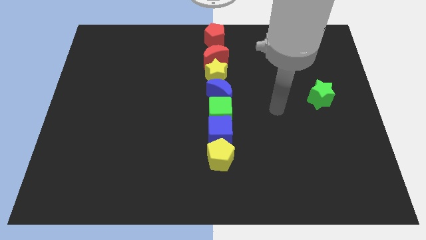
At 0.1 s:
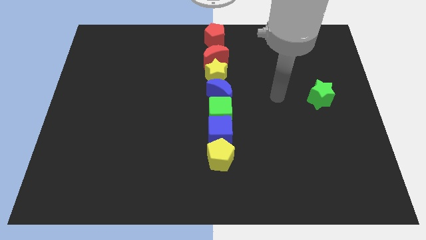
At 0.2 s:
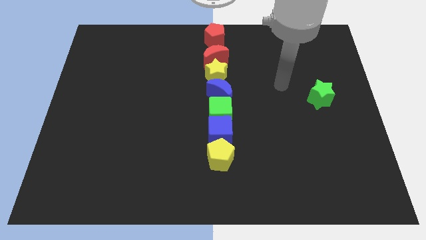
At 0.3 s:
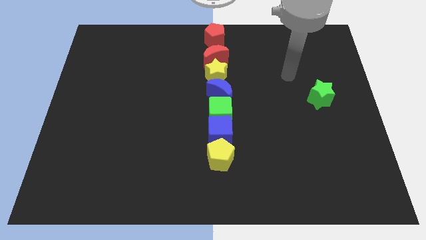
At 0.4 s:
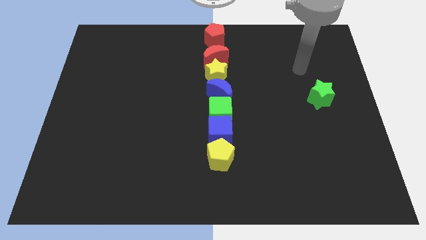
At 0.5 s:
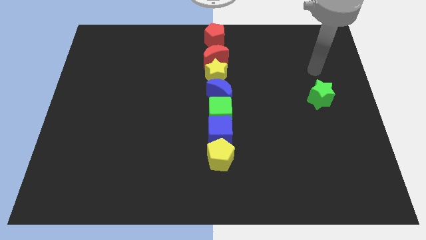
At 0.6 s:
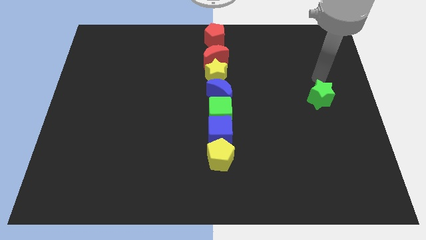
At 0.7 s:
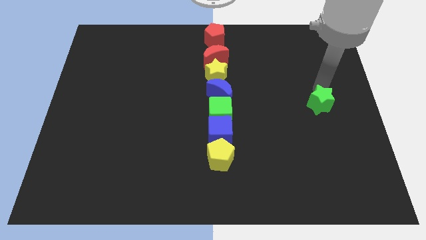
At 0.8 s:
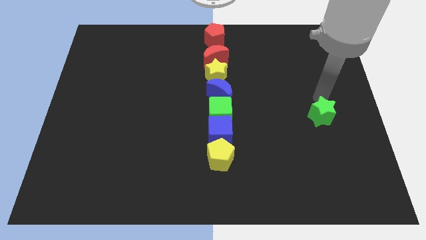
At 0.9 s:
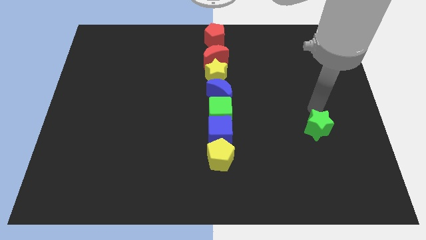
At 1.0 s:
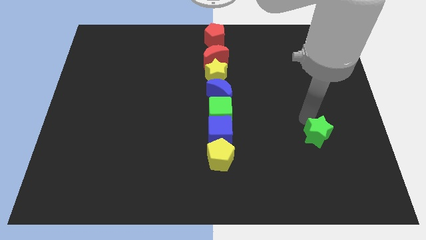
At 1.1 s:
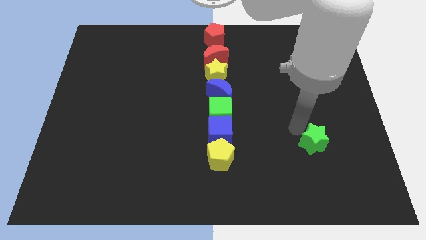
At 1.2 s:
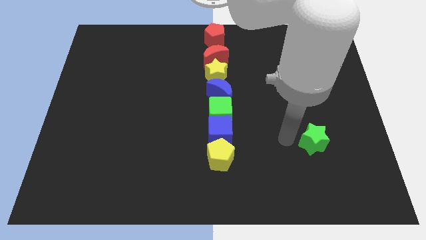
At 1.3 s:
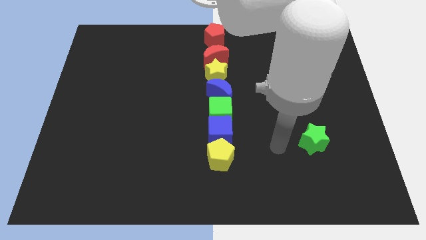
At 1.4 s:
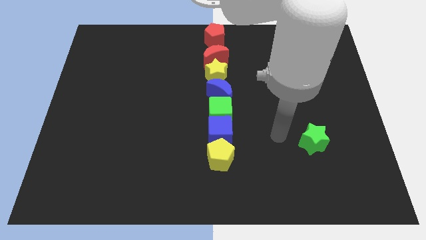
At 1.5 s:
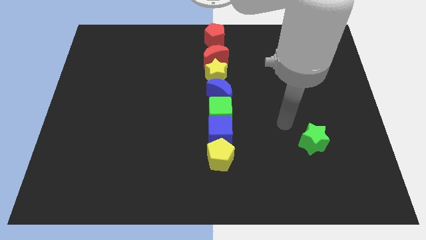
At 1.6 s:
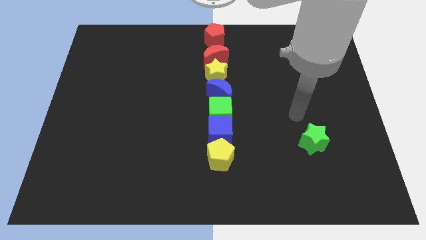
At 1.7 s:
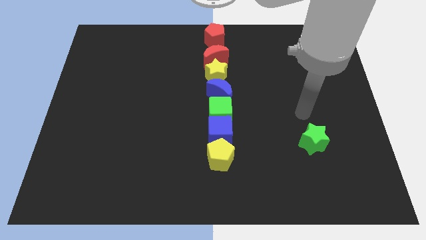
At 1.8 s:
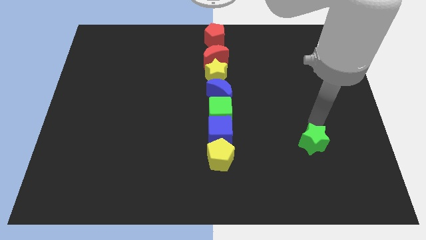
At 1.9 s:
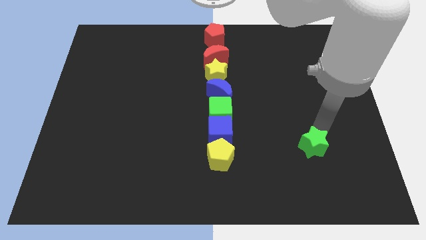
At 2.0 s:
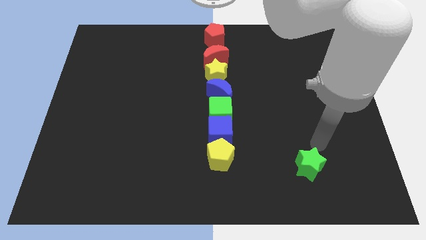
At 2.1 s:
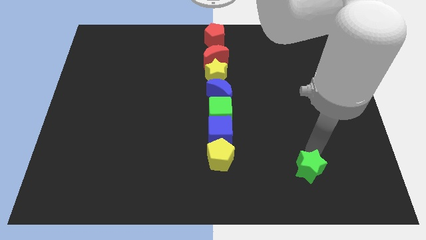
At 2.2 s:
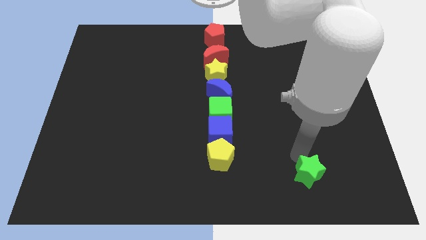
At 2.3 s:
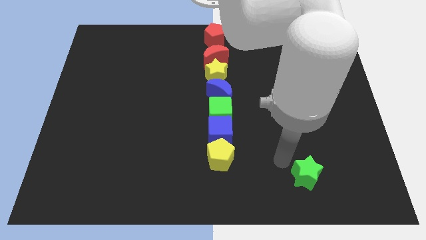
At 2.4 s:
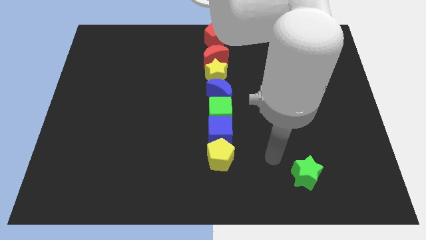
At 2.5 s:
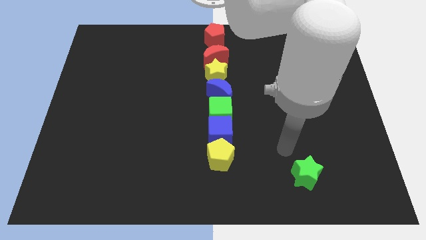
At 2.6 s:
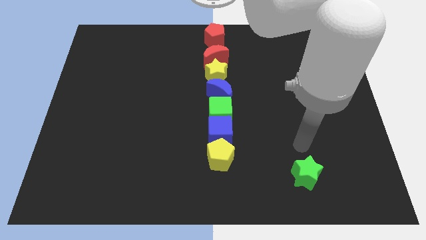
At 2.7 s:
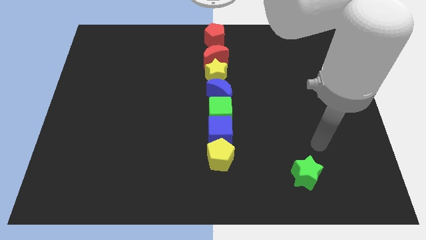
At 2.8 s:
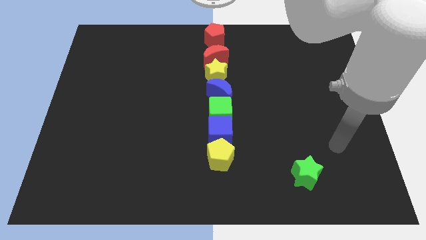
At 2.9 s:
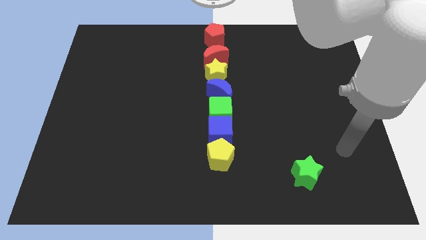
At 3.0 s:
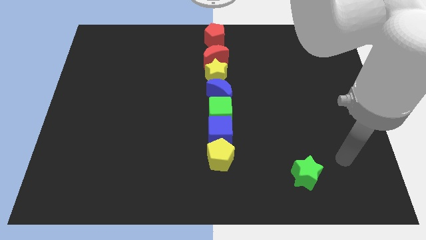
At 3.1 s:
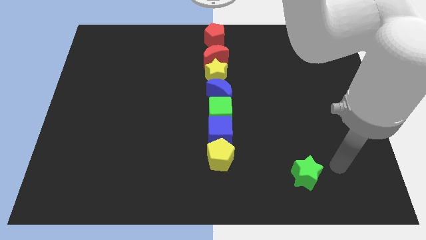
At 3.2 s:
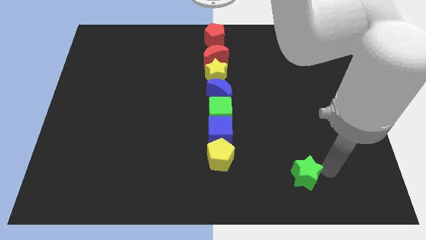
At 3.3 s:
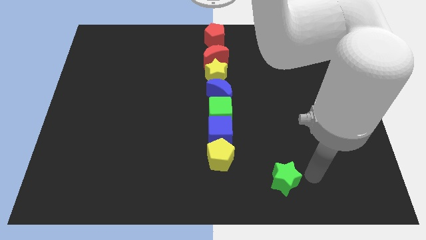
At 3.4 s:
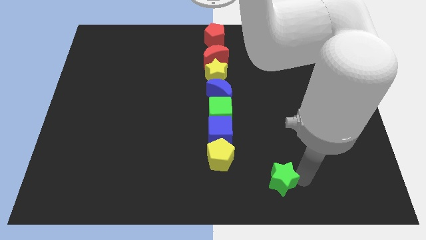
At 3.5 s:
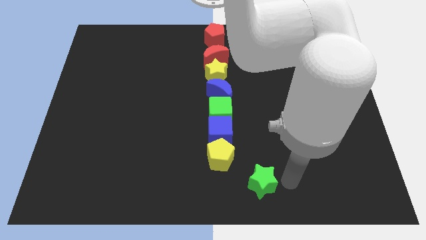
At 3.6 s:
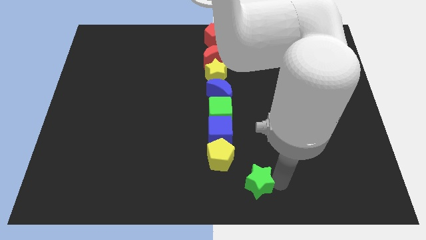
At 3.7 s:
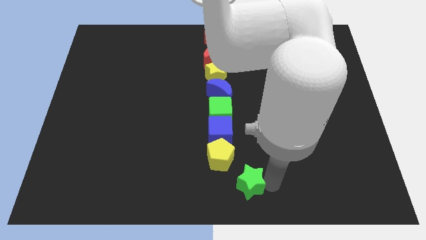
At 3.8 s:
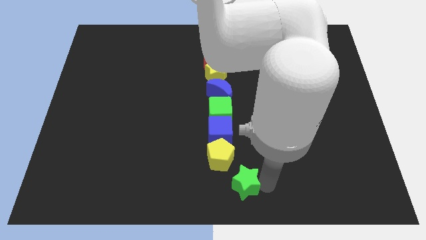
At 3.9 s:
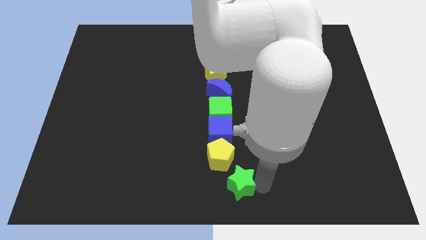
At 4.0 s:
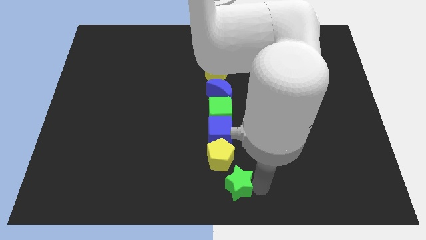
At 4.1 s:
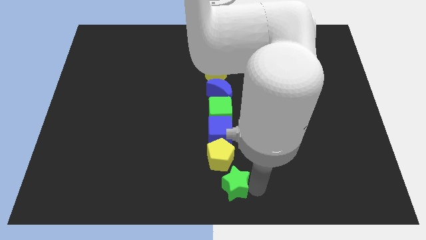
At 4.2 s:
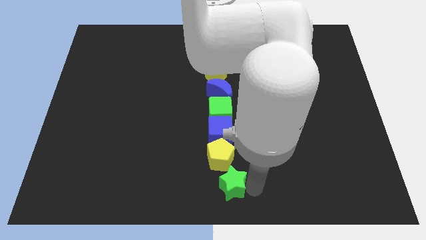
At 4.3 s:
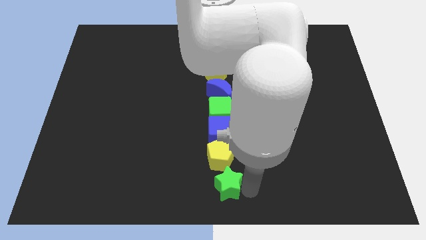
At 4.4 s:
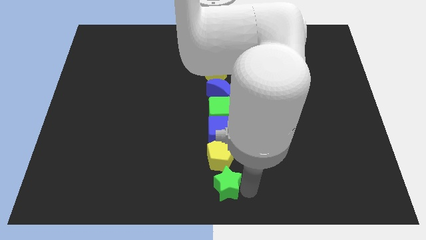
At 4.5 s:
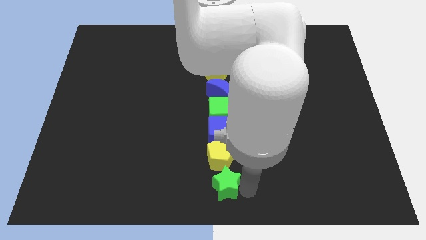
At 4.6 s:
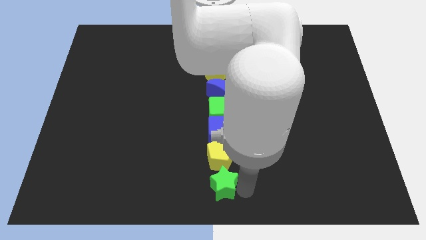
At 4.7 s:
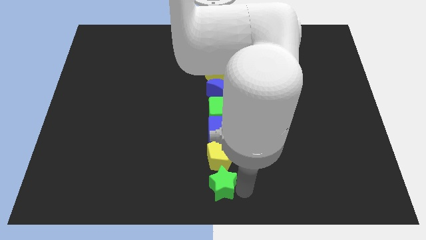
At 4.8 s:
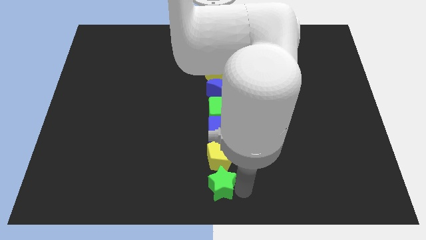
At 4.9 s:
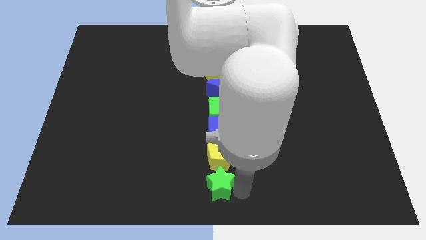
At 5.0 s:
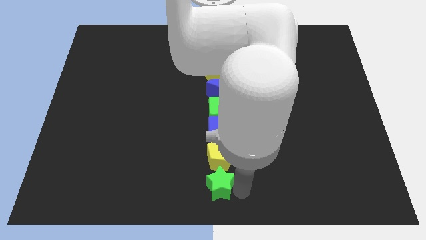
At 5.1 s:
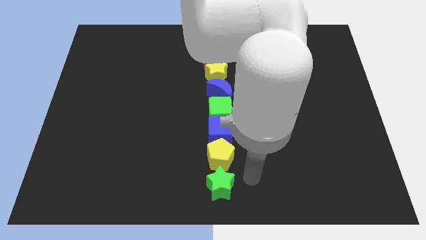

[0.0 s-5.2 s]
slide green star below yellow pentagon

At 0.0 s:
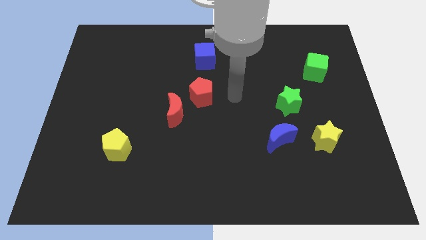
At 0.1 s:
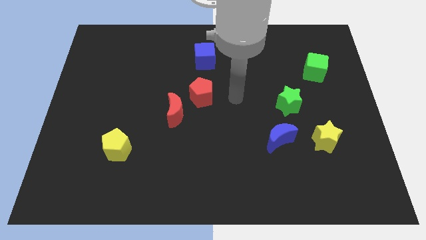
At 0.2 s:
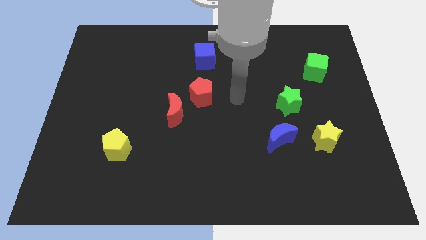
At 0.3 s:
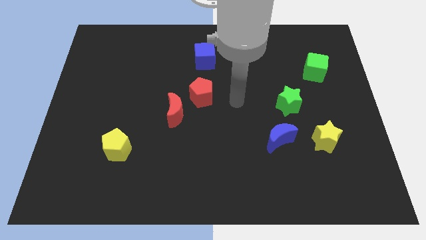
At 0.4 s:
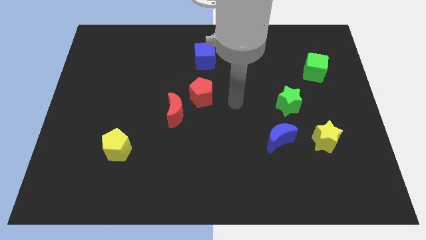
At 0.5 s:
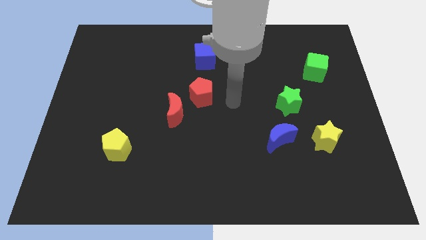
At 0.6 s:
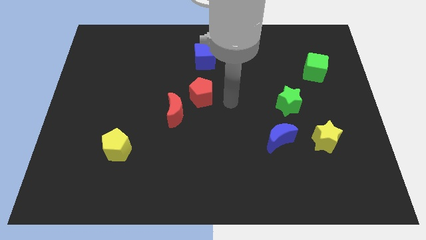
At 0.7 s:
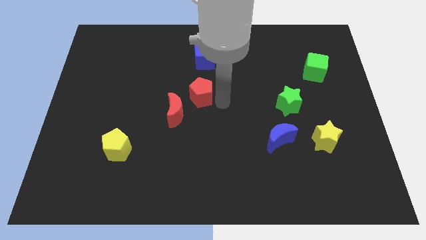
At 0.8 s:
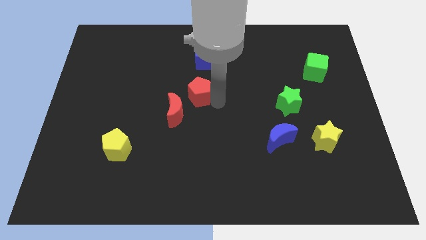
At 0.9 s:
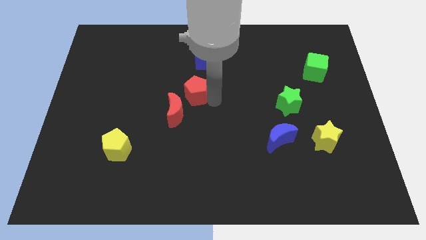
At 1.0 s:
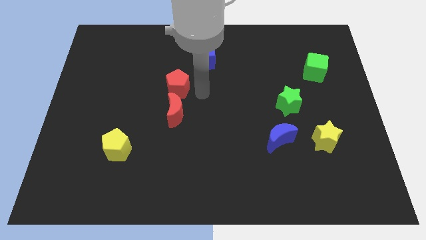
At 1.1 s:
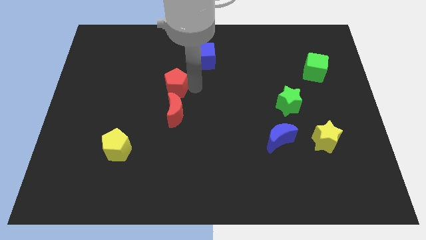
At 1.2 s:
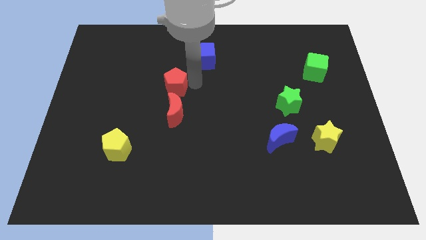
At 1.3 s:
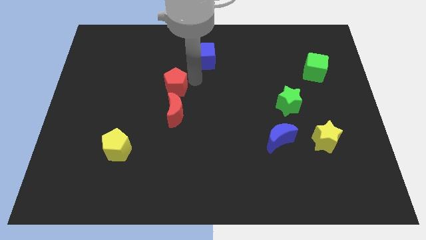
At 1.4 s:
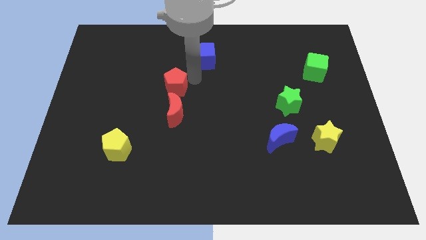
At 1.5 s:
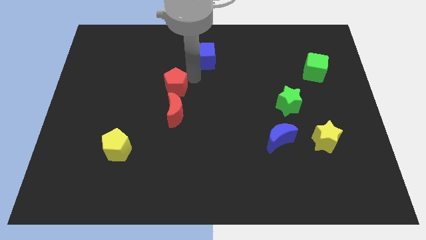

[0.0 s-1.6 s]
place the red pentagon above the red crescent

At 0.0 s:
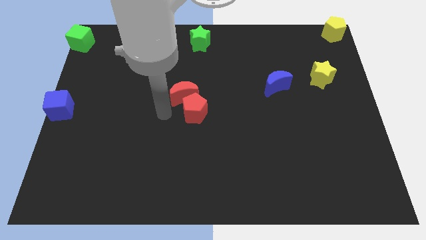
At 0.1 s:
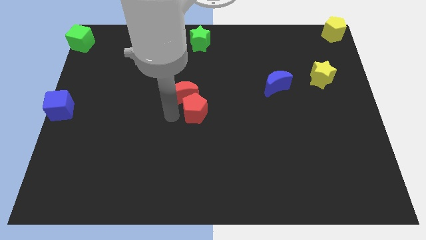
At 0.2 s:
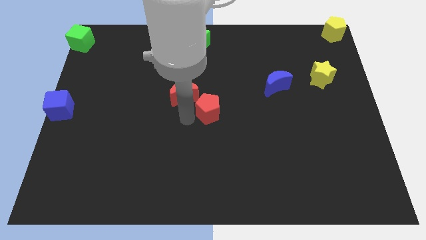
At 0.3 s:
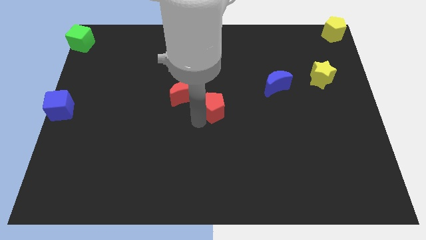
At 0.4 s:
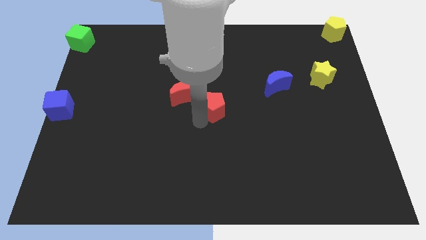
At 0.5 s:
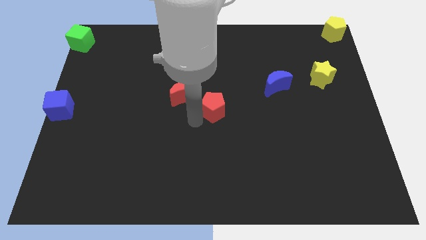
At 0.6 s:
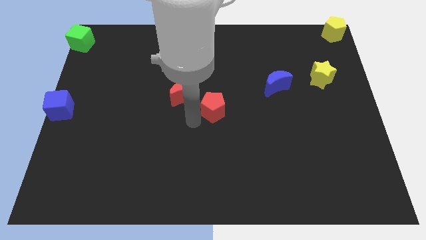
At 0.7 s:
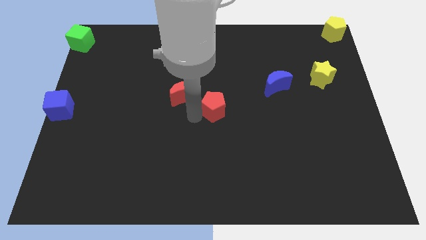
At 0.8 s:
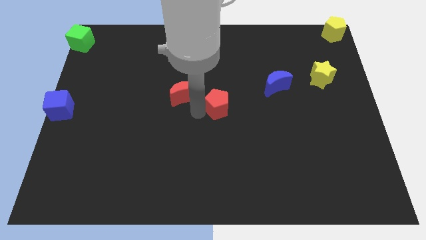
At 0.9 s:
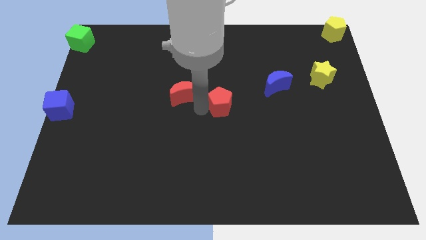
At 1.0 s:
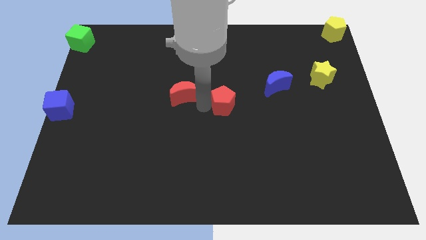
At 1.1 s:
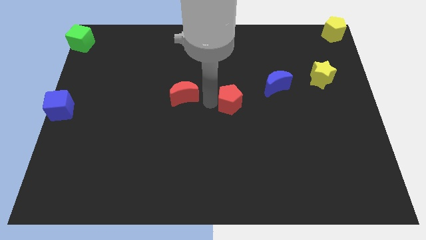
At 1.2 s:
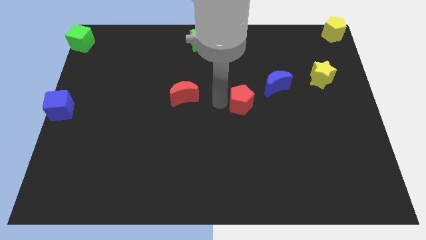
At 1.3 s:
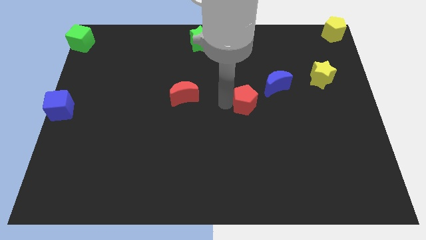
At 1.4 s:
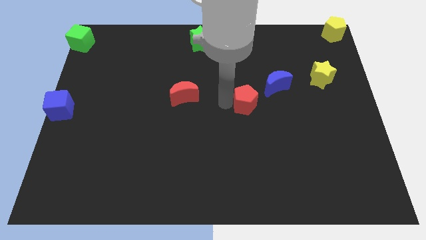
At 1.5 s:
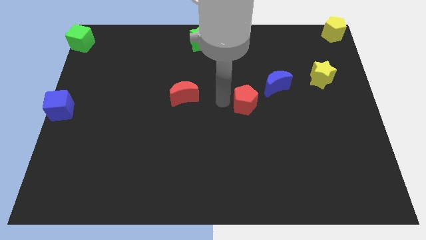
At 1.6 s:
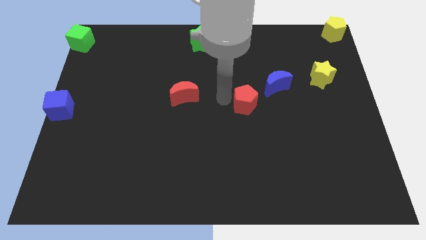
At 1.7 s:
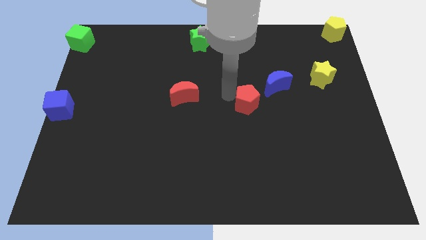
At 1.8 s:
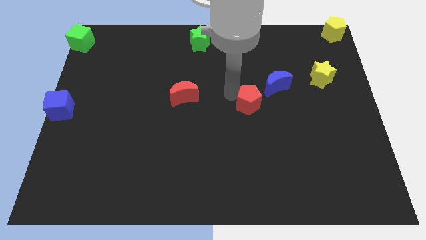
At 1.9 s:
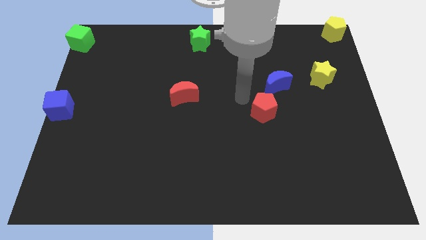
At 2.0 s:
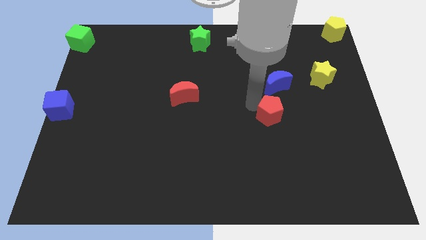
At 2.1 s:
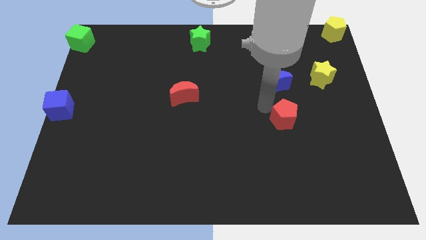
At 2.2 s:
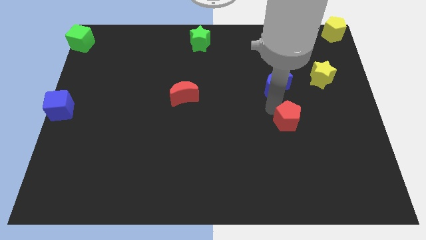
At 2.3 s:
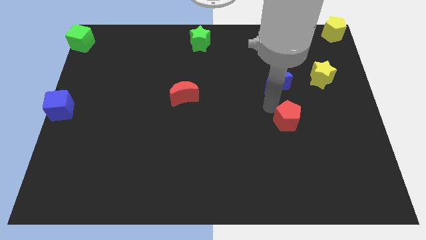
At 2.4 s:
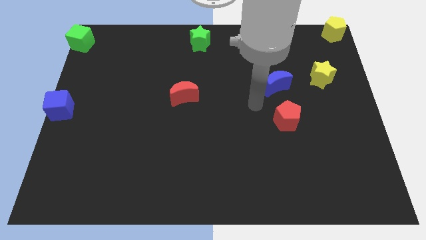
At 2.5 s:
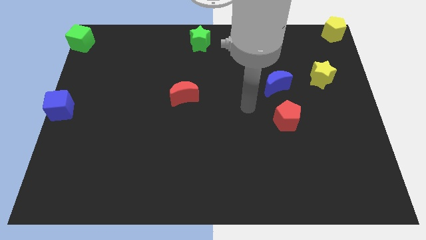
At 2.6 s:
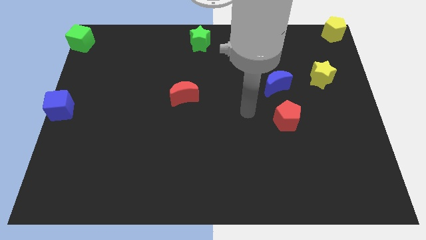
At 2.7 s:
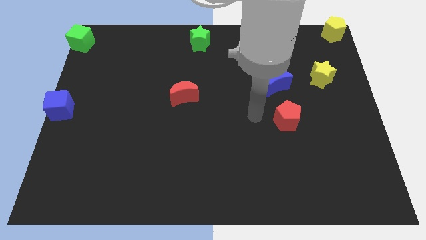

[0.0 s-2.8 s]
move the red pentagon below the blue moon
